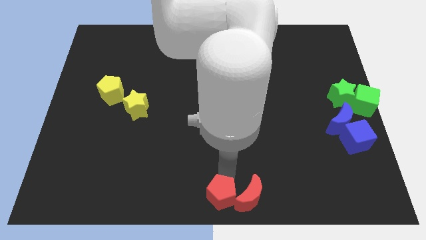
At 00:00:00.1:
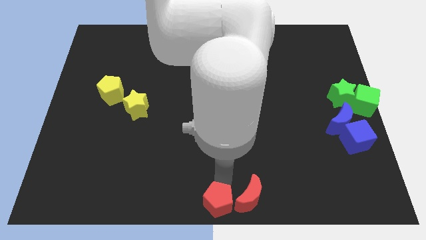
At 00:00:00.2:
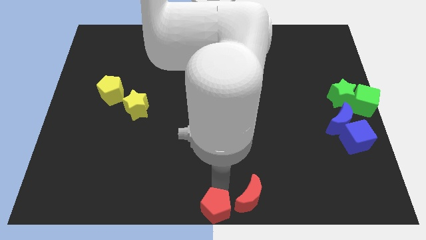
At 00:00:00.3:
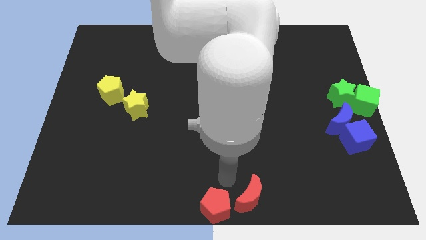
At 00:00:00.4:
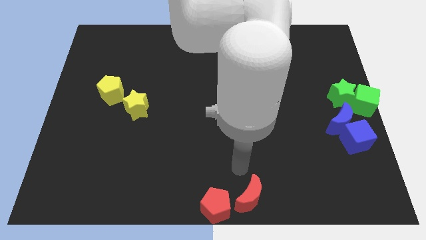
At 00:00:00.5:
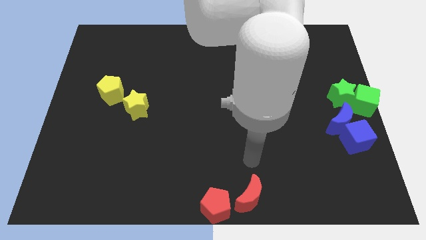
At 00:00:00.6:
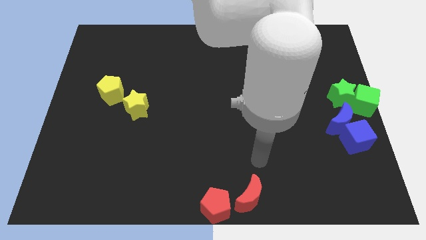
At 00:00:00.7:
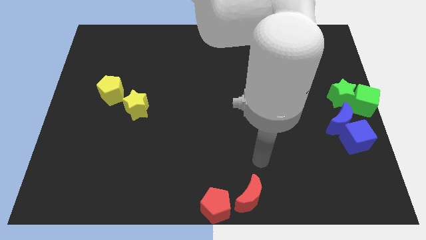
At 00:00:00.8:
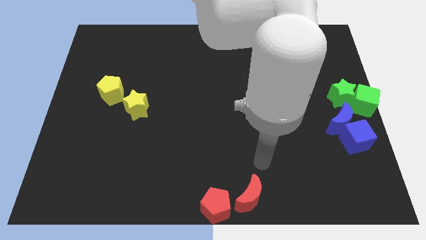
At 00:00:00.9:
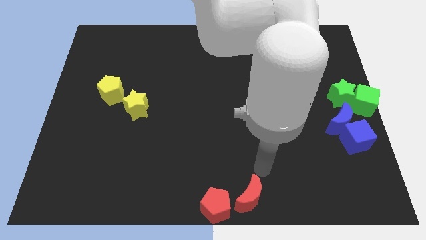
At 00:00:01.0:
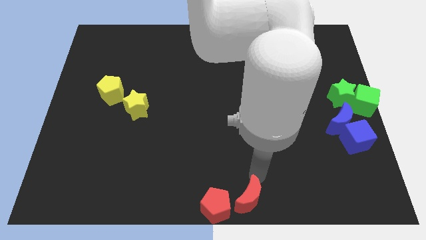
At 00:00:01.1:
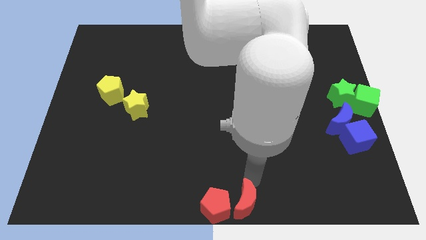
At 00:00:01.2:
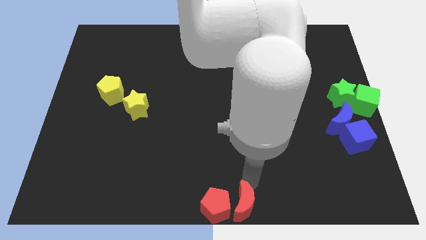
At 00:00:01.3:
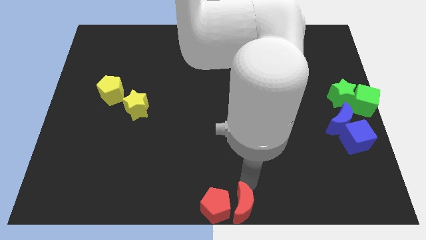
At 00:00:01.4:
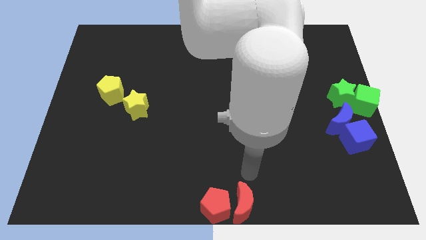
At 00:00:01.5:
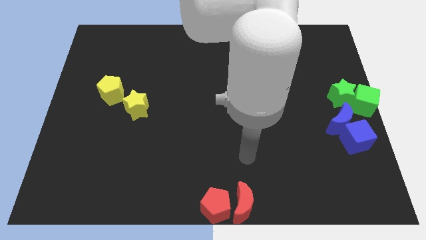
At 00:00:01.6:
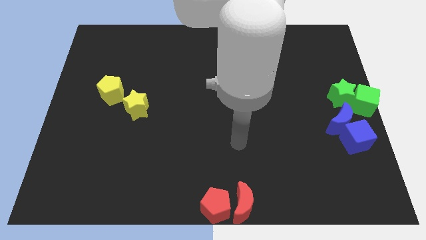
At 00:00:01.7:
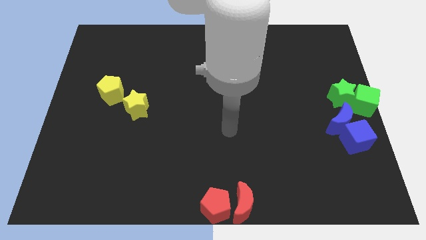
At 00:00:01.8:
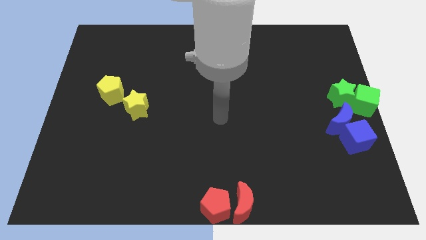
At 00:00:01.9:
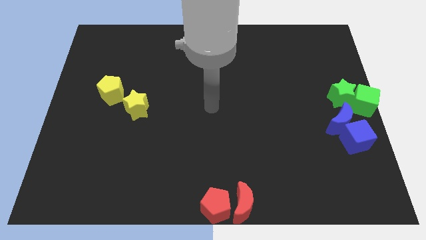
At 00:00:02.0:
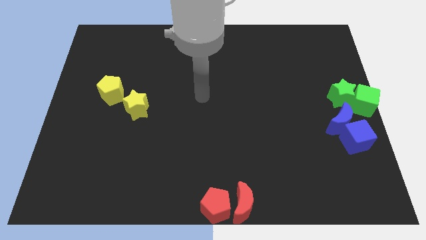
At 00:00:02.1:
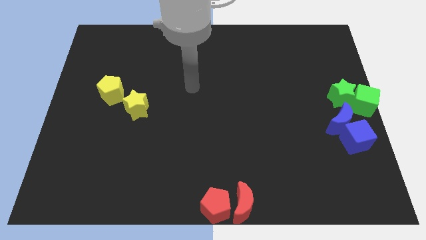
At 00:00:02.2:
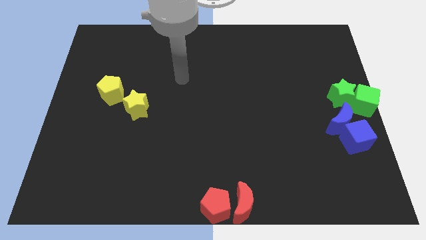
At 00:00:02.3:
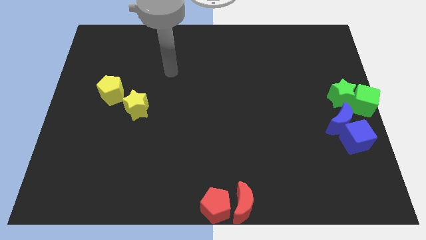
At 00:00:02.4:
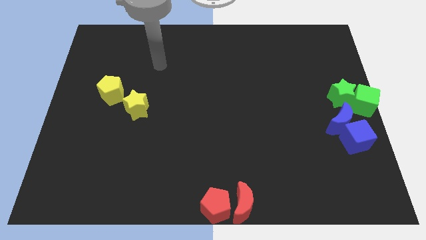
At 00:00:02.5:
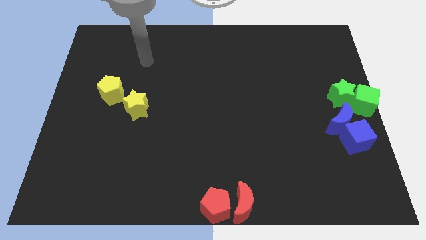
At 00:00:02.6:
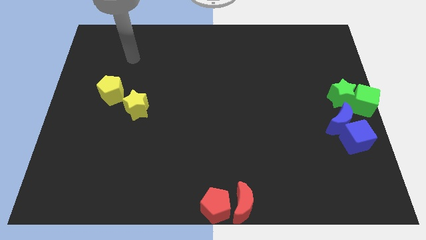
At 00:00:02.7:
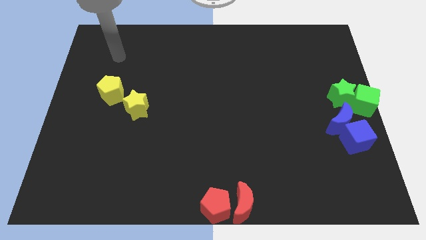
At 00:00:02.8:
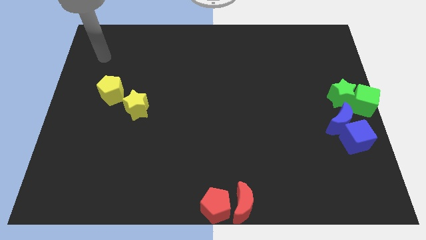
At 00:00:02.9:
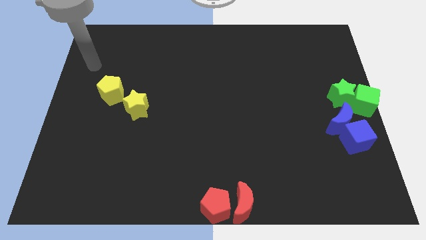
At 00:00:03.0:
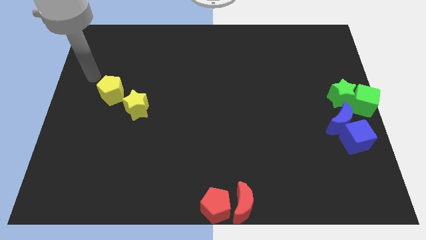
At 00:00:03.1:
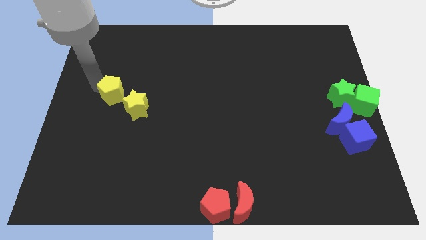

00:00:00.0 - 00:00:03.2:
push the red blocks slightly to the bottom

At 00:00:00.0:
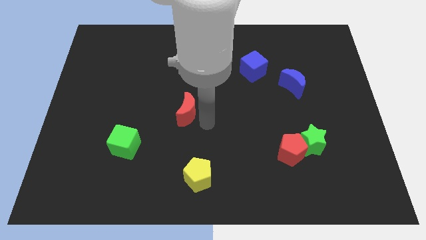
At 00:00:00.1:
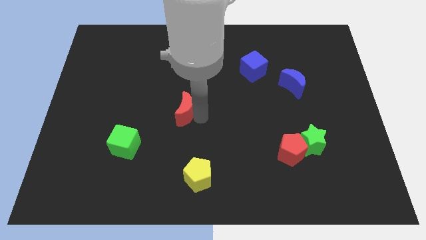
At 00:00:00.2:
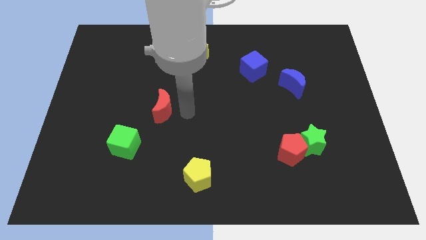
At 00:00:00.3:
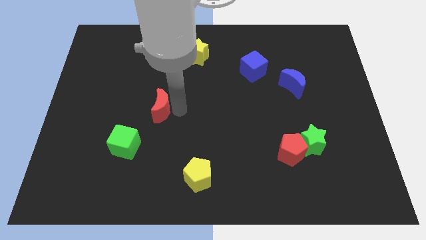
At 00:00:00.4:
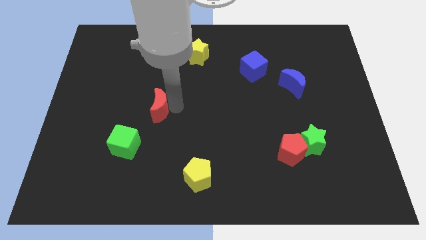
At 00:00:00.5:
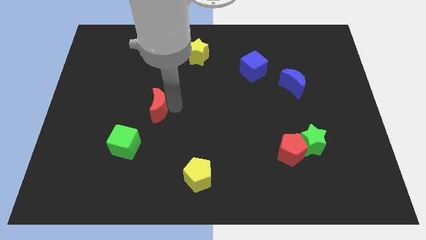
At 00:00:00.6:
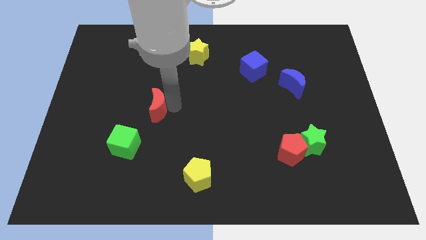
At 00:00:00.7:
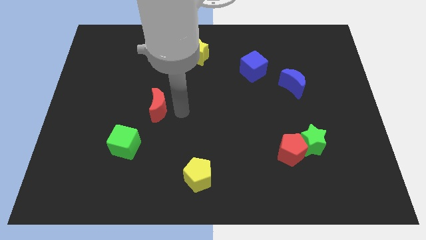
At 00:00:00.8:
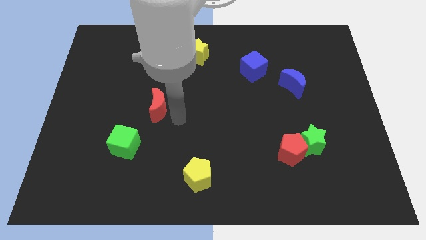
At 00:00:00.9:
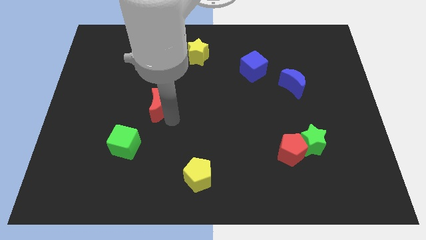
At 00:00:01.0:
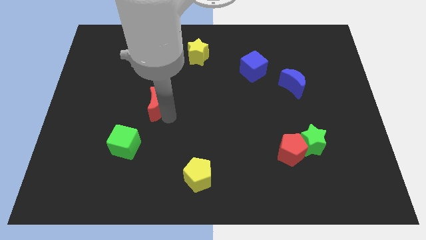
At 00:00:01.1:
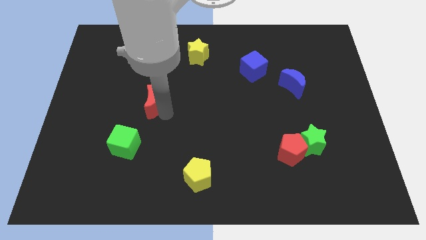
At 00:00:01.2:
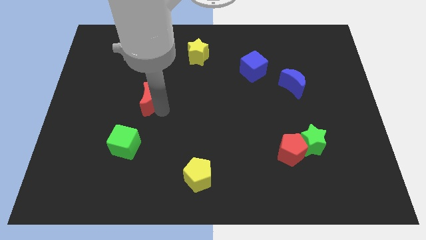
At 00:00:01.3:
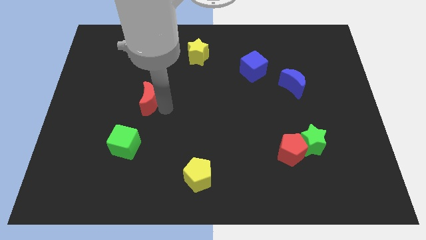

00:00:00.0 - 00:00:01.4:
push the red moon to the left side of the board

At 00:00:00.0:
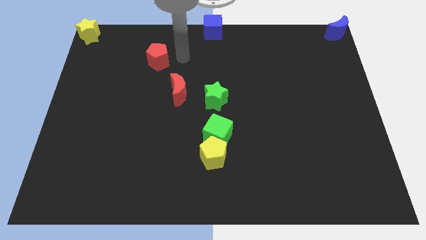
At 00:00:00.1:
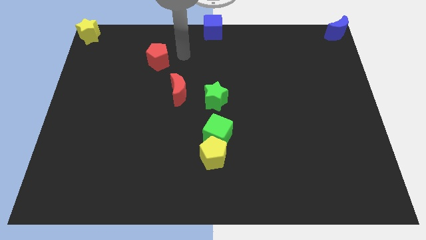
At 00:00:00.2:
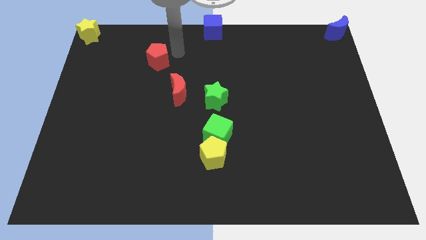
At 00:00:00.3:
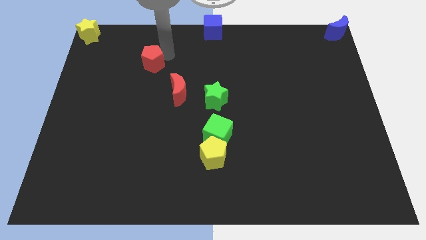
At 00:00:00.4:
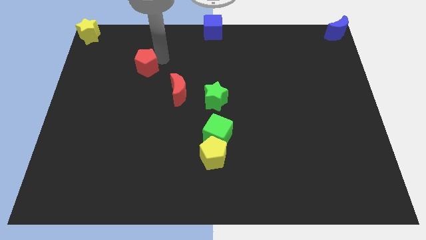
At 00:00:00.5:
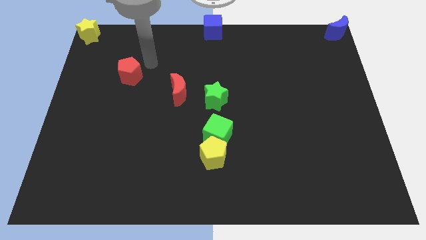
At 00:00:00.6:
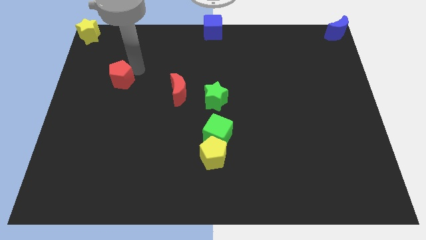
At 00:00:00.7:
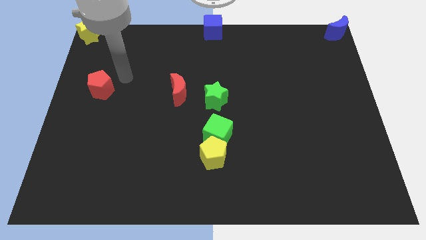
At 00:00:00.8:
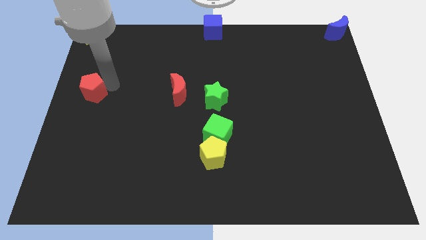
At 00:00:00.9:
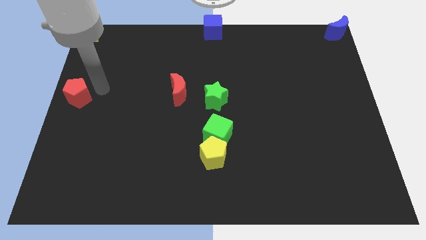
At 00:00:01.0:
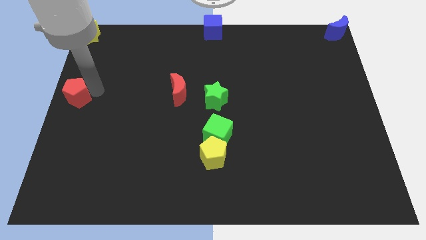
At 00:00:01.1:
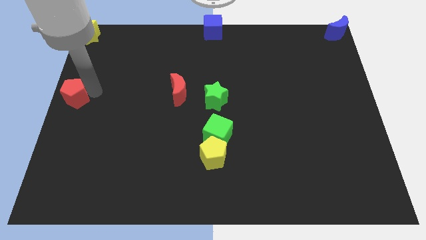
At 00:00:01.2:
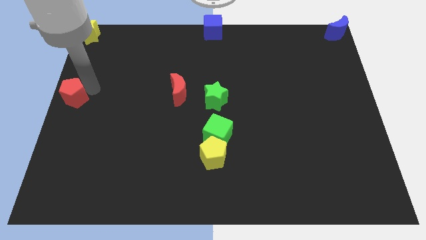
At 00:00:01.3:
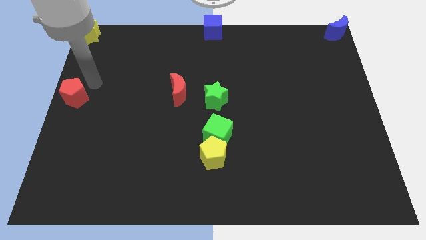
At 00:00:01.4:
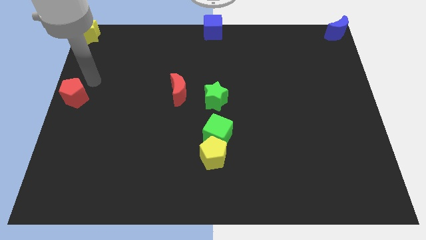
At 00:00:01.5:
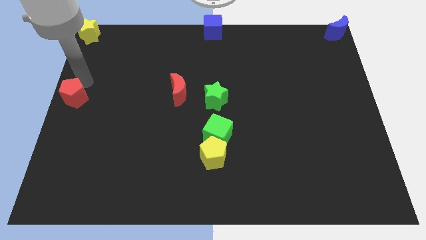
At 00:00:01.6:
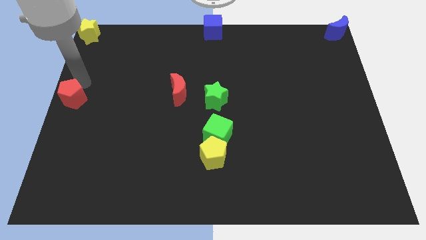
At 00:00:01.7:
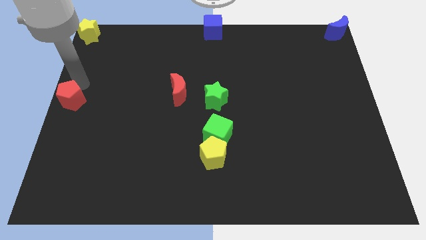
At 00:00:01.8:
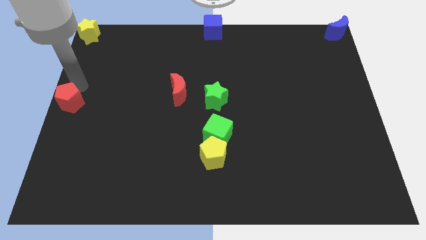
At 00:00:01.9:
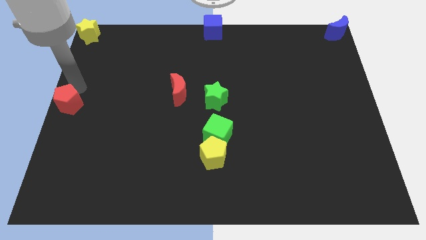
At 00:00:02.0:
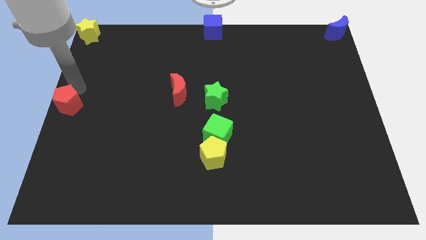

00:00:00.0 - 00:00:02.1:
move the red pentagon to the left side center of the board

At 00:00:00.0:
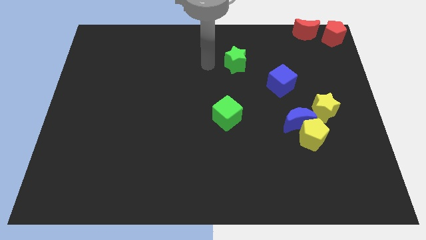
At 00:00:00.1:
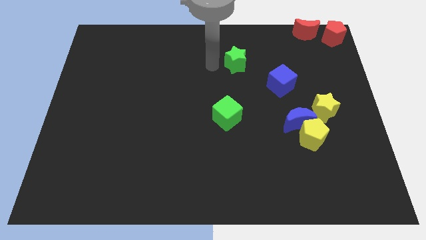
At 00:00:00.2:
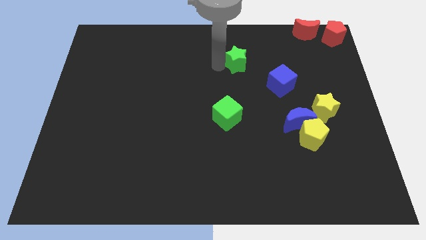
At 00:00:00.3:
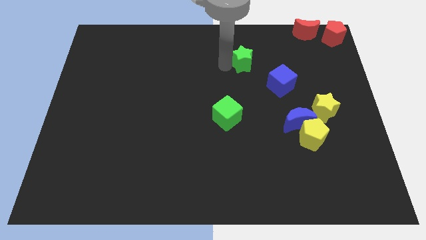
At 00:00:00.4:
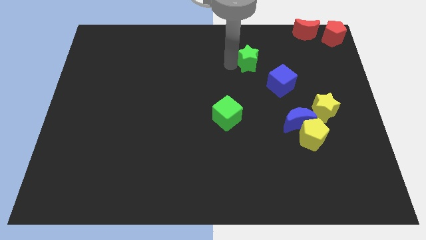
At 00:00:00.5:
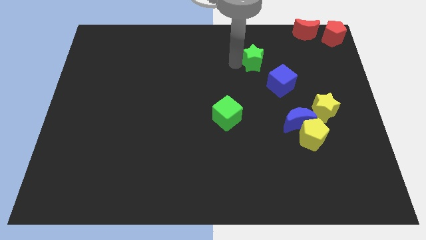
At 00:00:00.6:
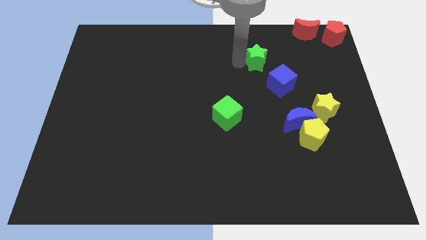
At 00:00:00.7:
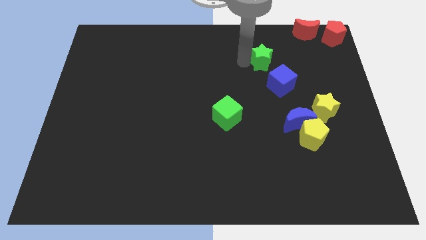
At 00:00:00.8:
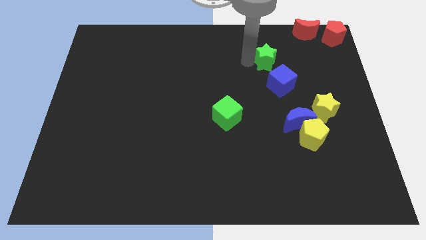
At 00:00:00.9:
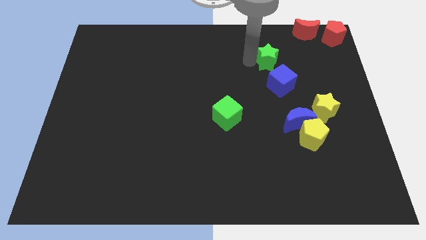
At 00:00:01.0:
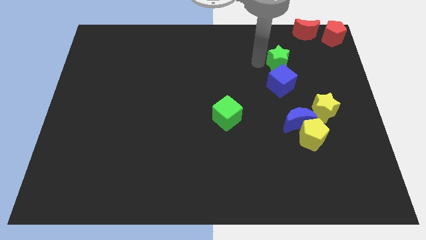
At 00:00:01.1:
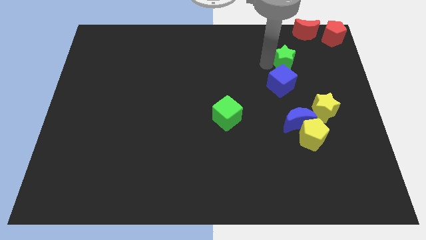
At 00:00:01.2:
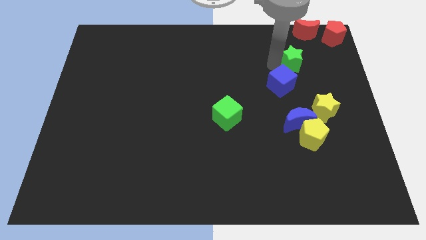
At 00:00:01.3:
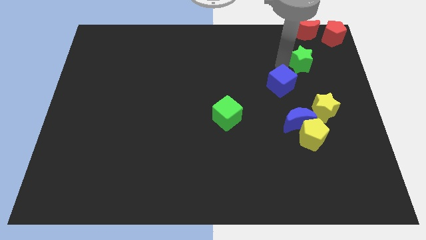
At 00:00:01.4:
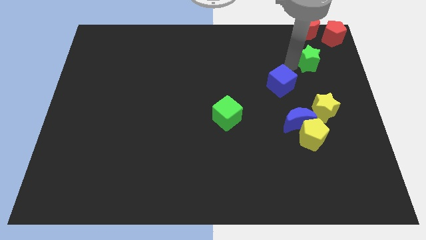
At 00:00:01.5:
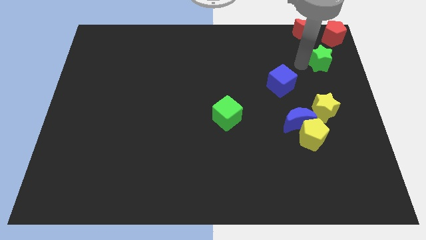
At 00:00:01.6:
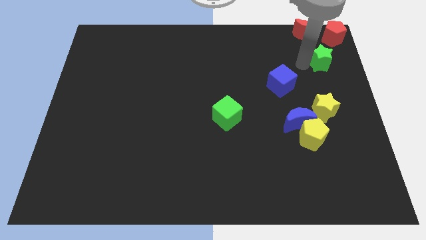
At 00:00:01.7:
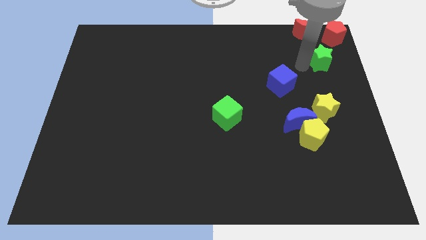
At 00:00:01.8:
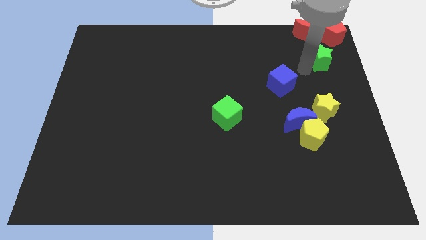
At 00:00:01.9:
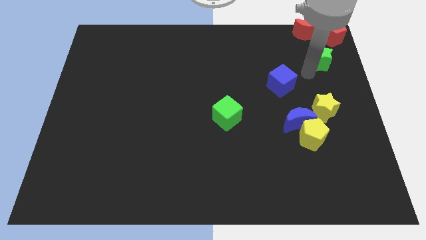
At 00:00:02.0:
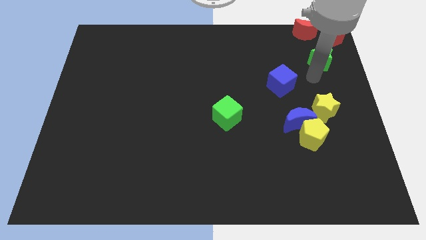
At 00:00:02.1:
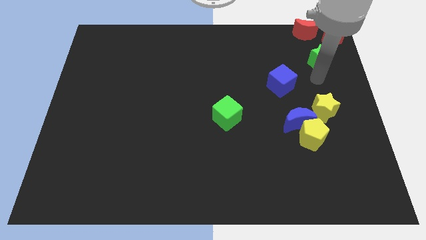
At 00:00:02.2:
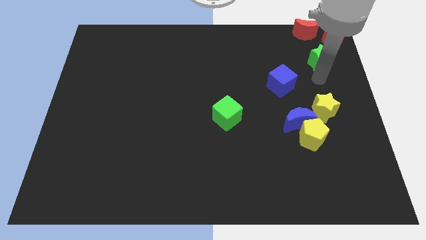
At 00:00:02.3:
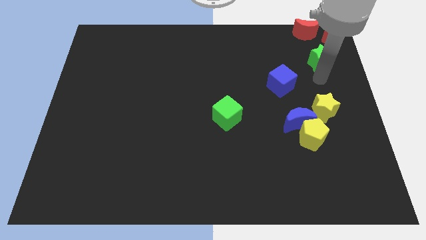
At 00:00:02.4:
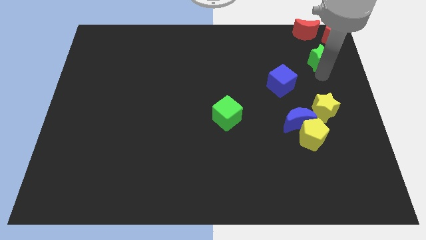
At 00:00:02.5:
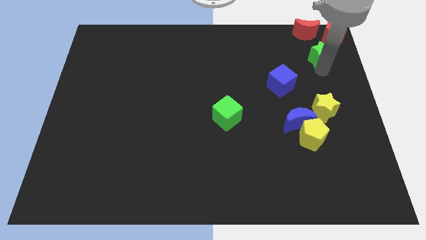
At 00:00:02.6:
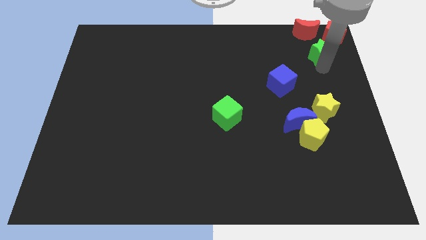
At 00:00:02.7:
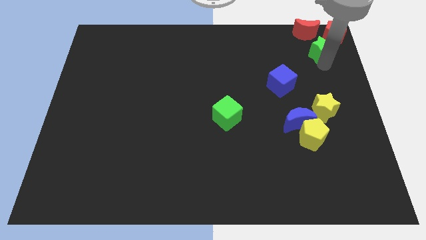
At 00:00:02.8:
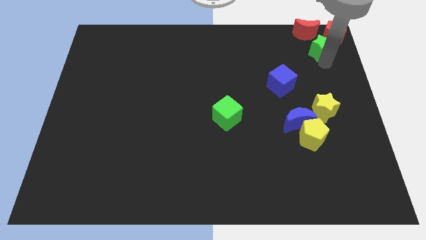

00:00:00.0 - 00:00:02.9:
move the green star to the bottom right of the red crescent
